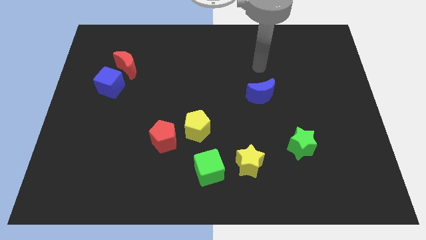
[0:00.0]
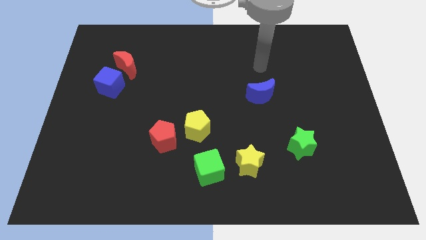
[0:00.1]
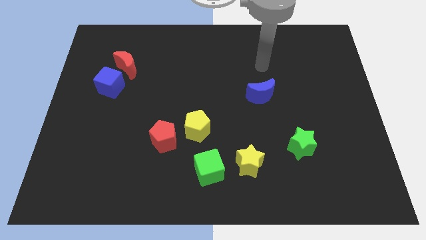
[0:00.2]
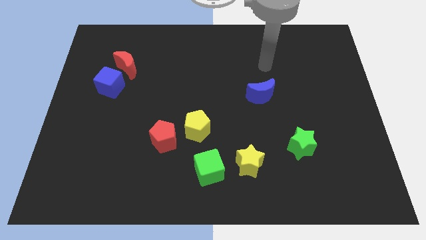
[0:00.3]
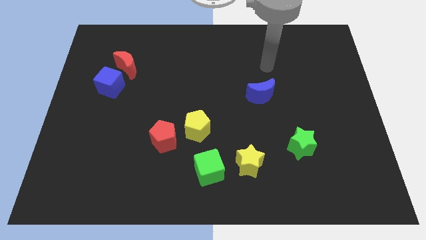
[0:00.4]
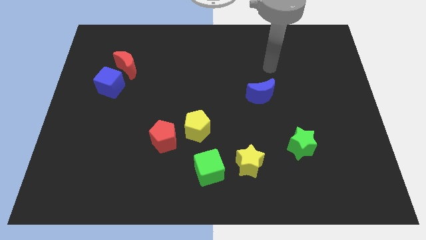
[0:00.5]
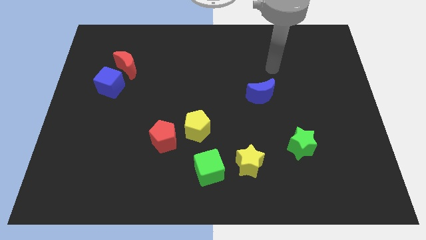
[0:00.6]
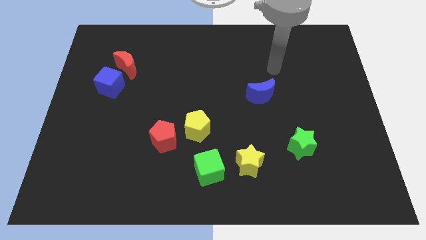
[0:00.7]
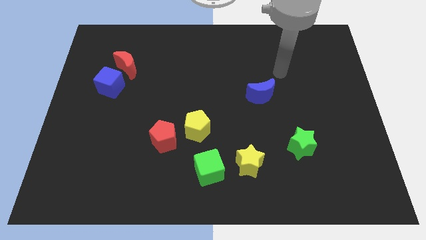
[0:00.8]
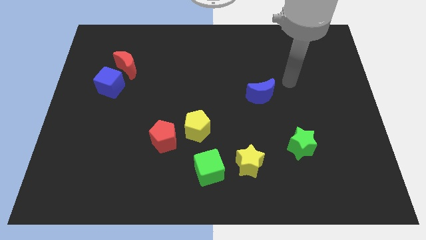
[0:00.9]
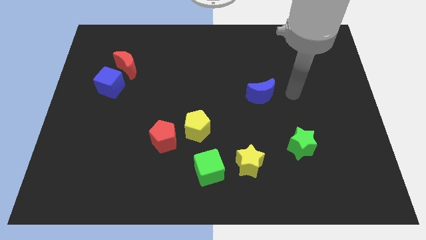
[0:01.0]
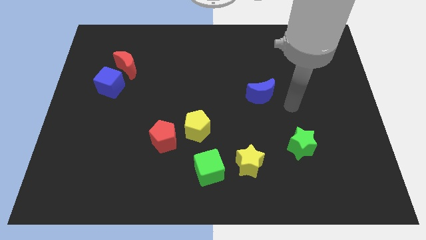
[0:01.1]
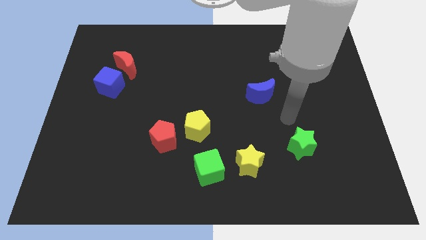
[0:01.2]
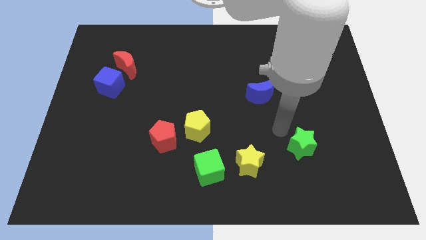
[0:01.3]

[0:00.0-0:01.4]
place your arm in between the blue moon and green star

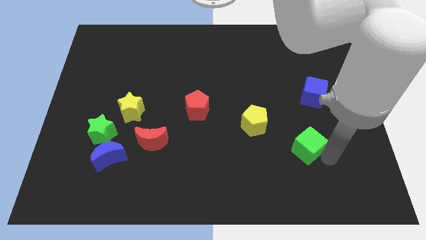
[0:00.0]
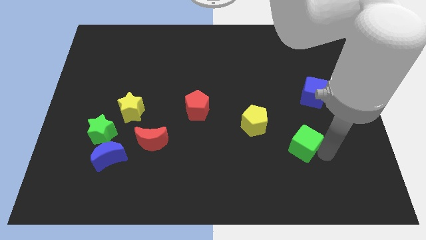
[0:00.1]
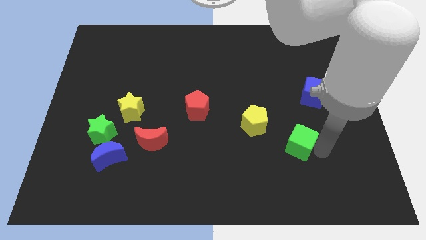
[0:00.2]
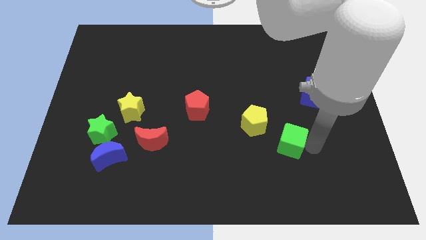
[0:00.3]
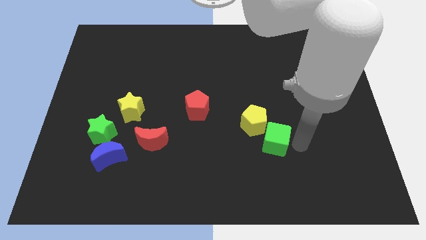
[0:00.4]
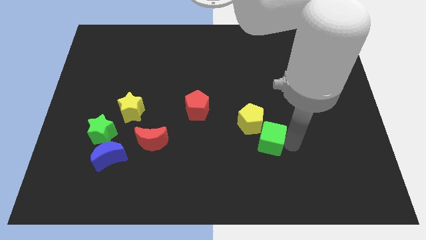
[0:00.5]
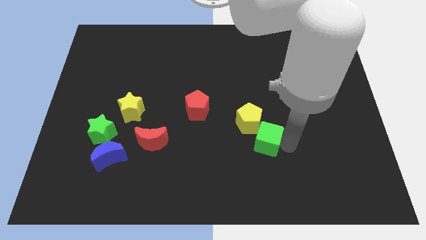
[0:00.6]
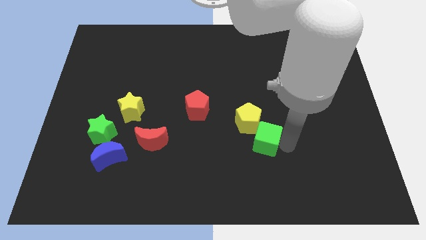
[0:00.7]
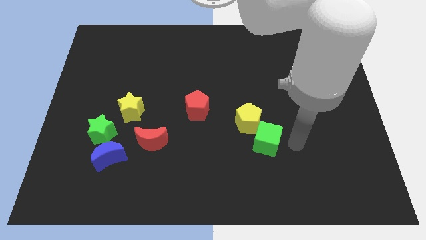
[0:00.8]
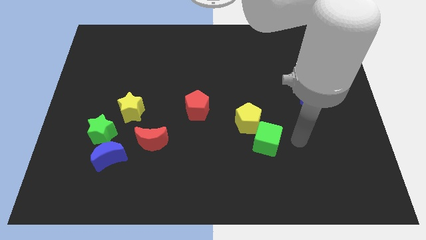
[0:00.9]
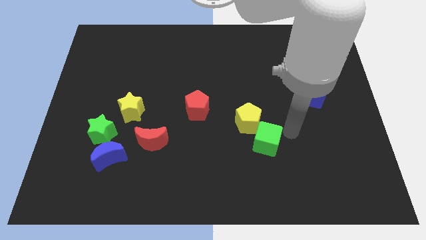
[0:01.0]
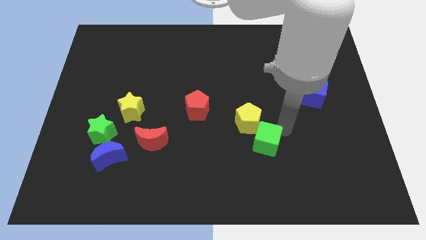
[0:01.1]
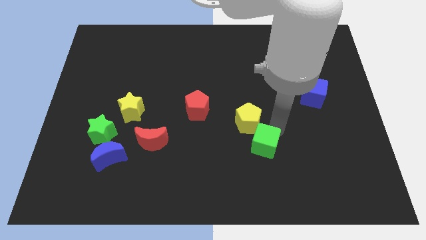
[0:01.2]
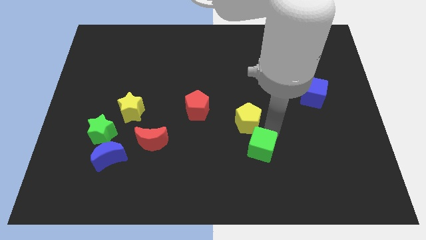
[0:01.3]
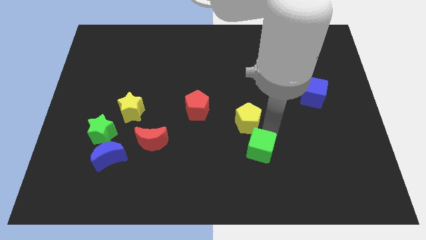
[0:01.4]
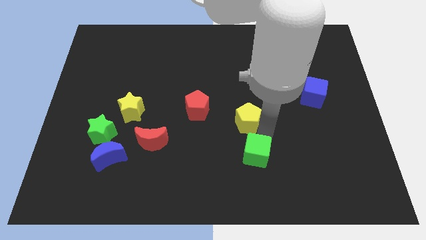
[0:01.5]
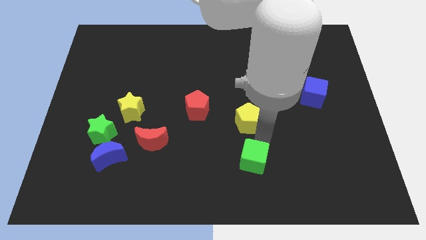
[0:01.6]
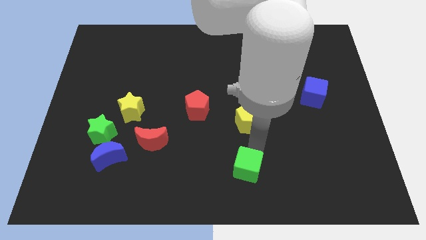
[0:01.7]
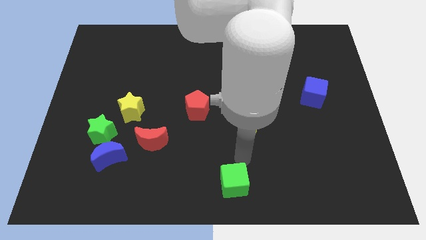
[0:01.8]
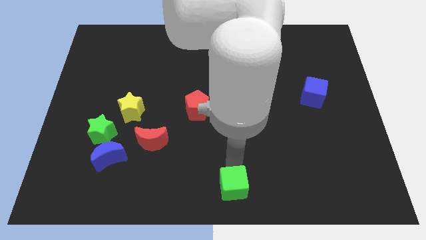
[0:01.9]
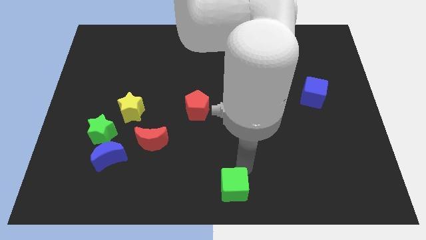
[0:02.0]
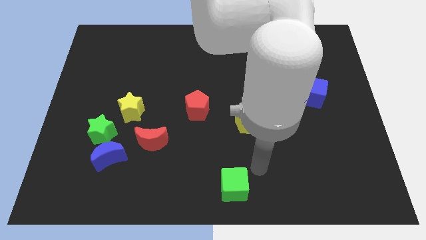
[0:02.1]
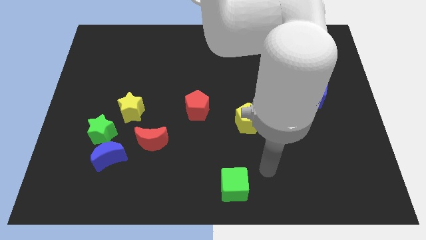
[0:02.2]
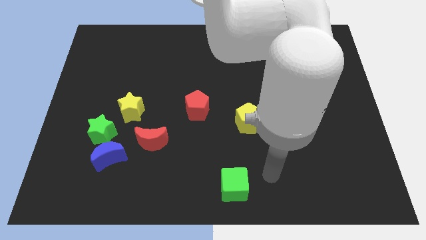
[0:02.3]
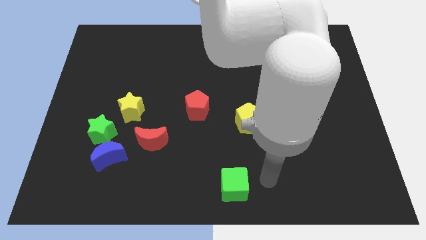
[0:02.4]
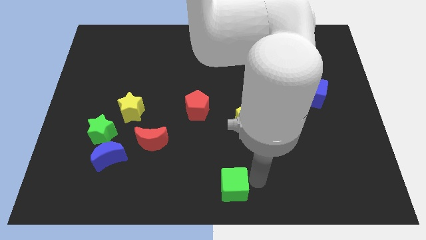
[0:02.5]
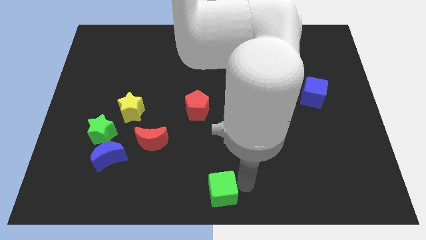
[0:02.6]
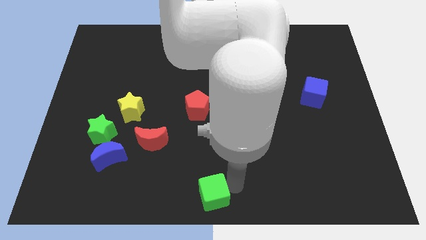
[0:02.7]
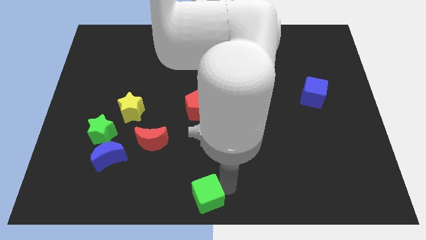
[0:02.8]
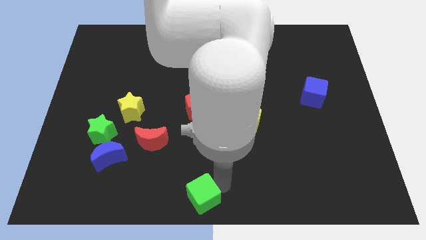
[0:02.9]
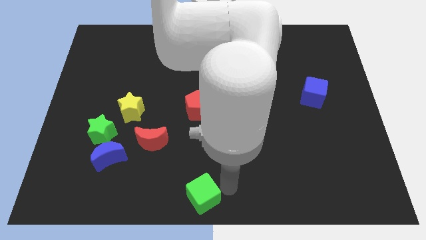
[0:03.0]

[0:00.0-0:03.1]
push the green cube vertically at the bottom side of the red pentagon

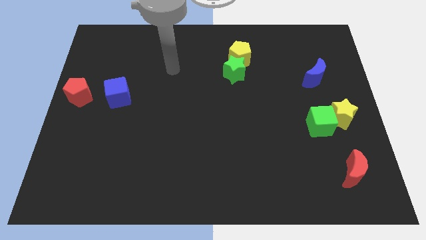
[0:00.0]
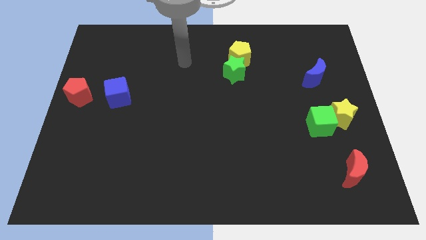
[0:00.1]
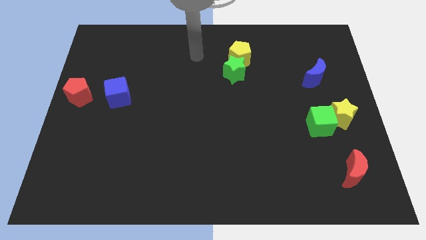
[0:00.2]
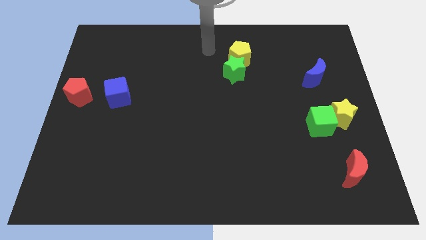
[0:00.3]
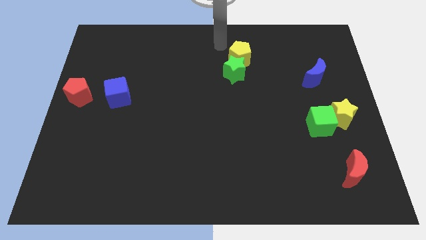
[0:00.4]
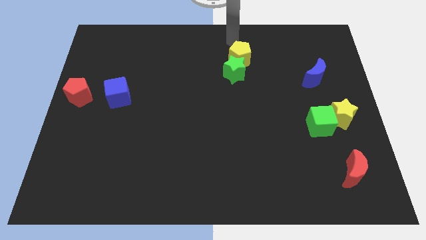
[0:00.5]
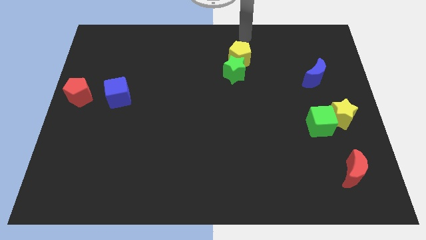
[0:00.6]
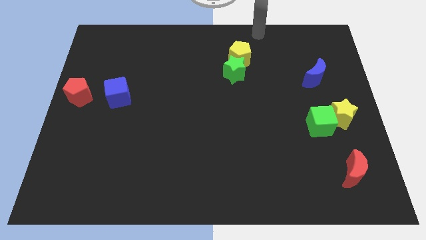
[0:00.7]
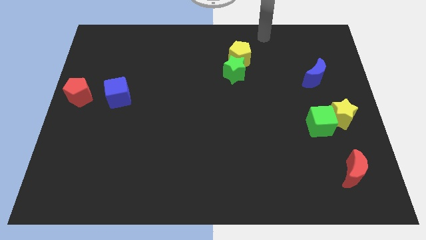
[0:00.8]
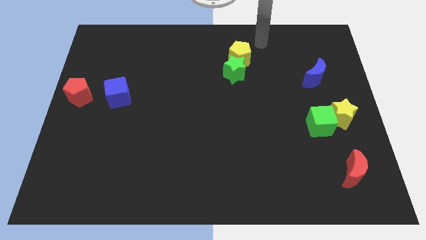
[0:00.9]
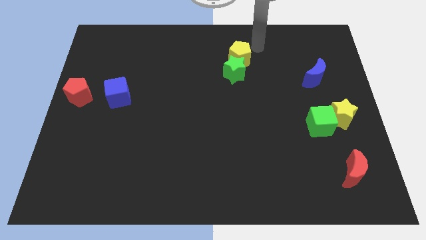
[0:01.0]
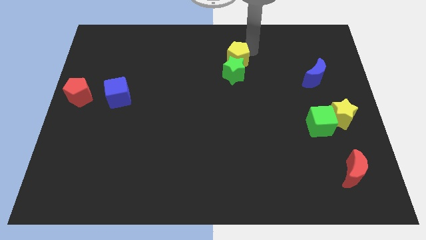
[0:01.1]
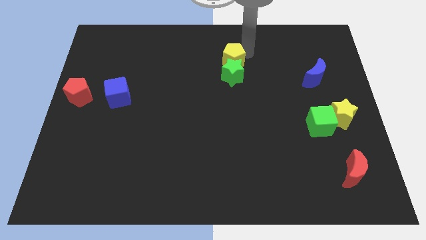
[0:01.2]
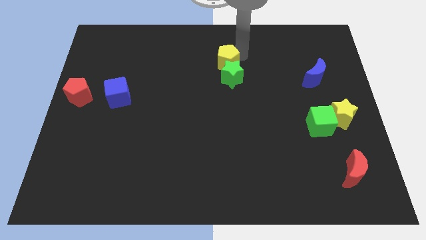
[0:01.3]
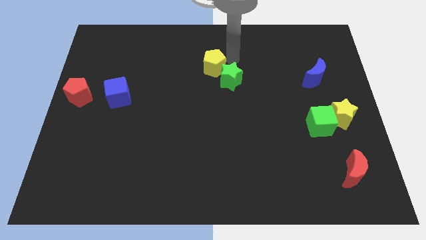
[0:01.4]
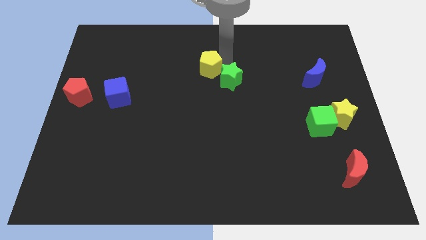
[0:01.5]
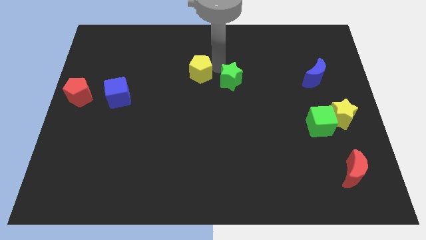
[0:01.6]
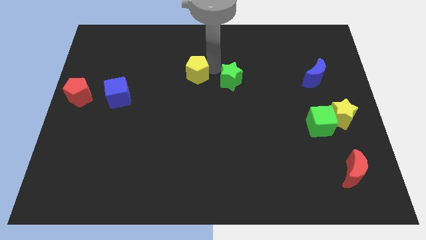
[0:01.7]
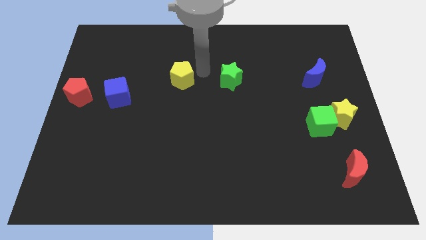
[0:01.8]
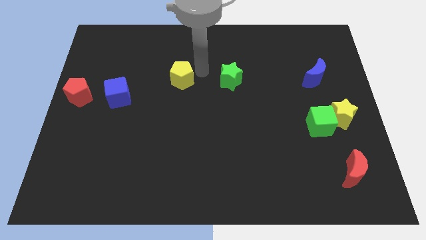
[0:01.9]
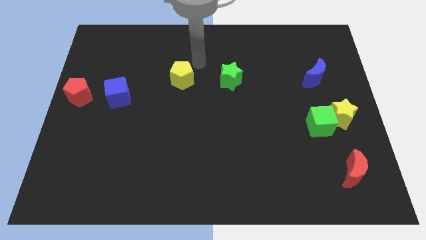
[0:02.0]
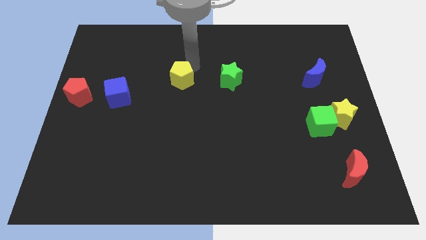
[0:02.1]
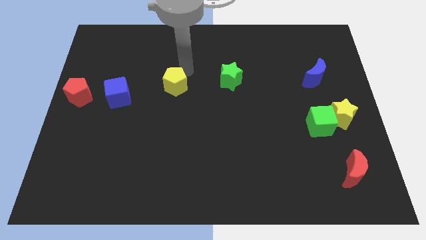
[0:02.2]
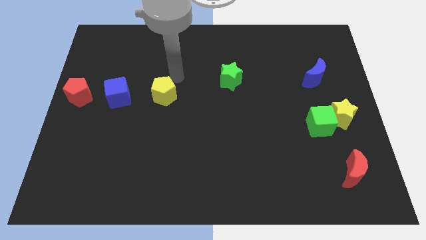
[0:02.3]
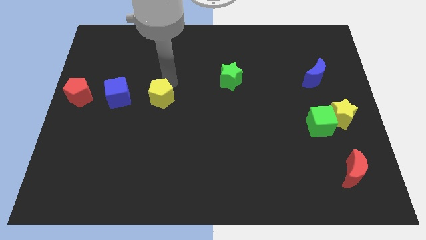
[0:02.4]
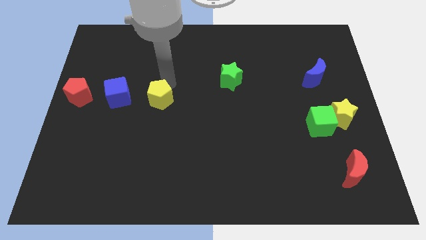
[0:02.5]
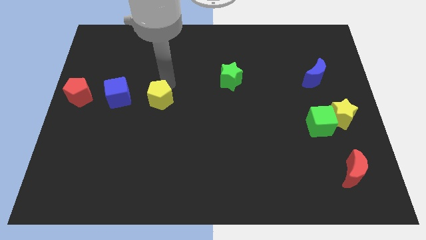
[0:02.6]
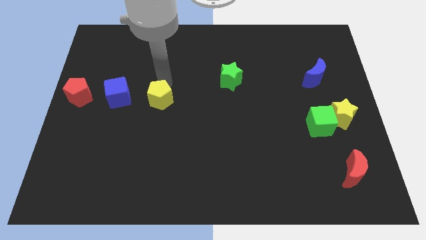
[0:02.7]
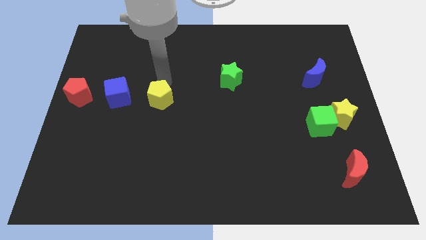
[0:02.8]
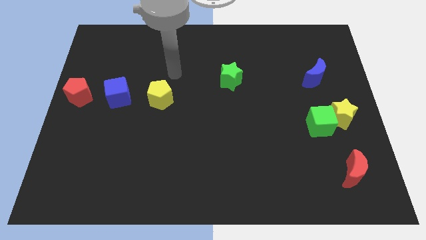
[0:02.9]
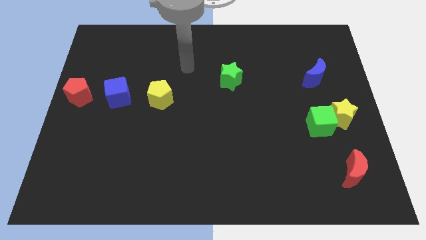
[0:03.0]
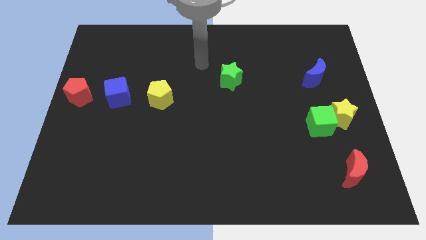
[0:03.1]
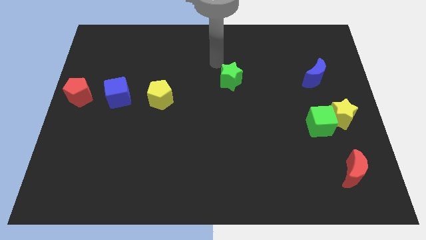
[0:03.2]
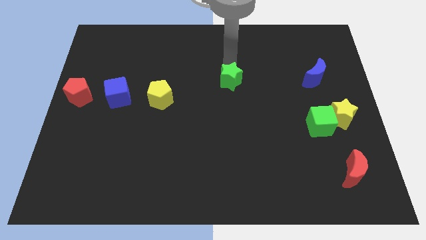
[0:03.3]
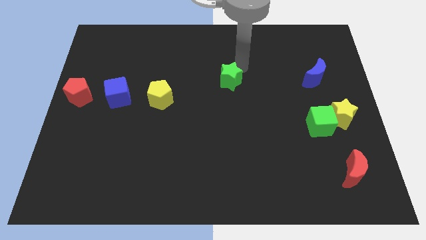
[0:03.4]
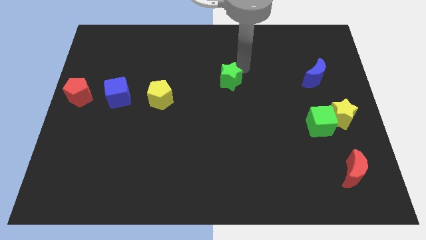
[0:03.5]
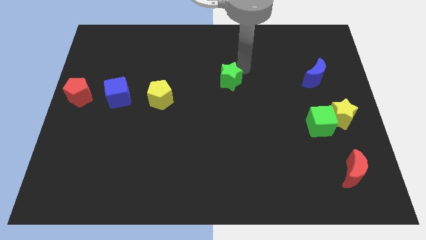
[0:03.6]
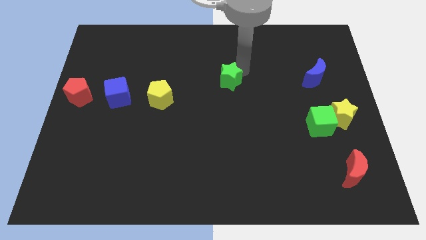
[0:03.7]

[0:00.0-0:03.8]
move the yellow pentagon to the right of blue cube

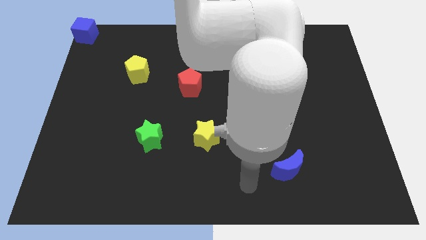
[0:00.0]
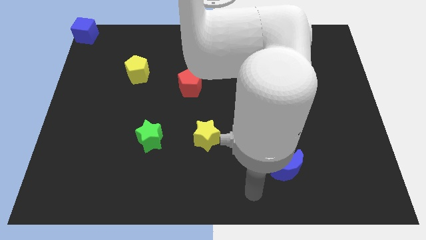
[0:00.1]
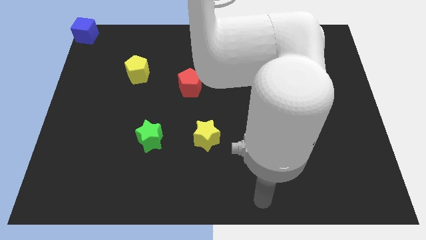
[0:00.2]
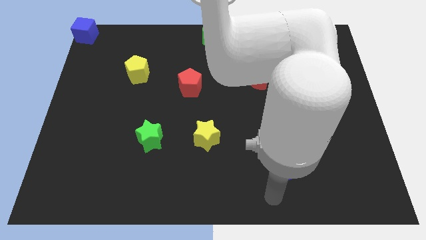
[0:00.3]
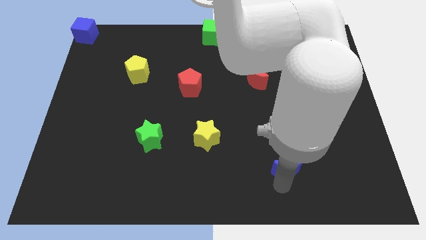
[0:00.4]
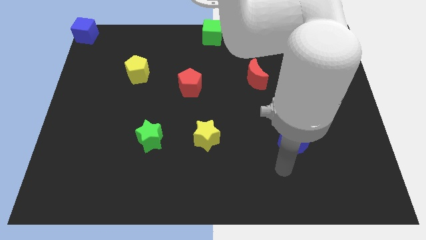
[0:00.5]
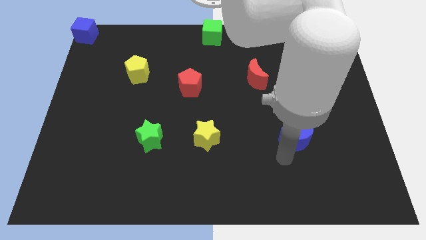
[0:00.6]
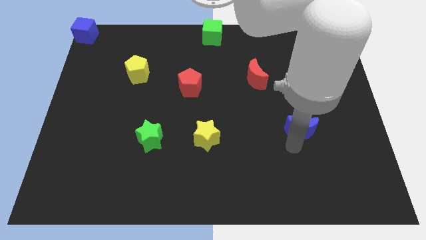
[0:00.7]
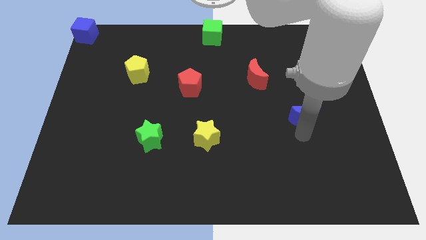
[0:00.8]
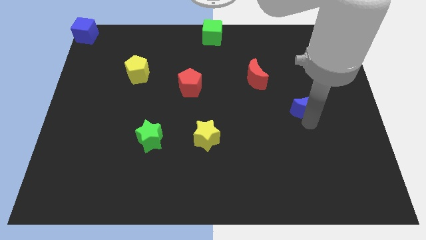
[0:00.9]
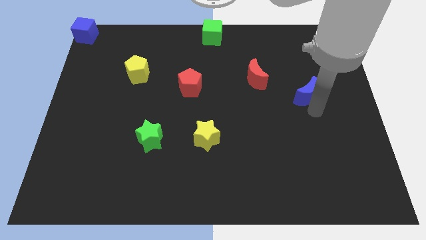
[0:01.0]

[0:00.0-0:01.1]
move the blue crescent to the top of the board
